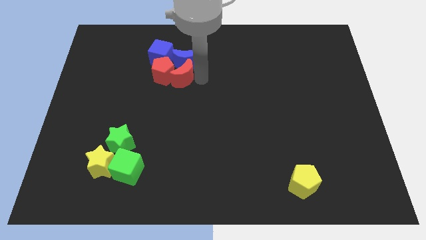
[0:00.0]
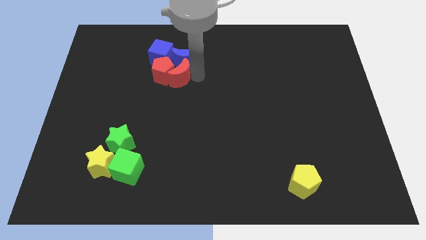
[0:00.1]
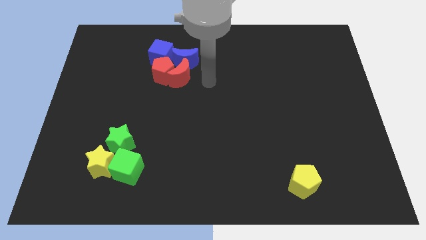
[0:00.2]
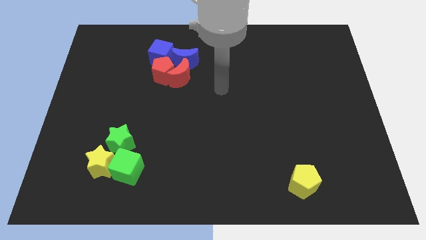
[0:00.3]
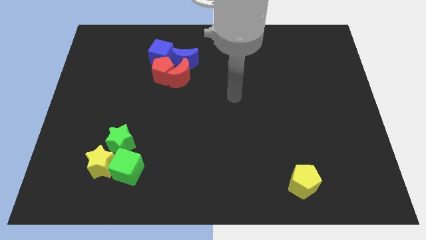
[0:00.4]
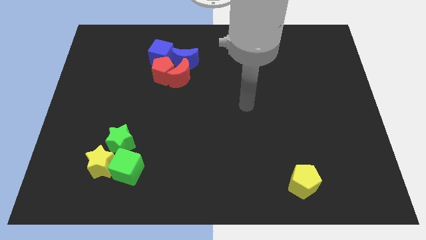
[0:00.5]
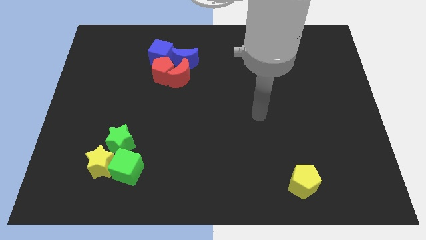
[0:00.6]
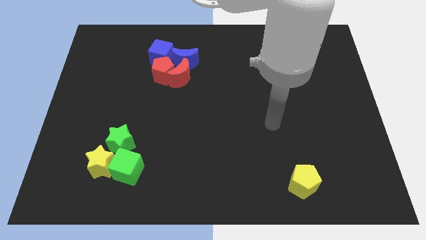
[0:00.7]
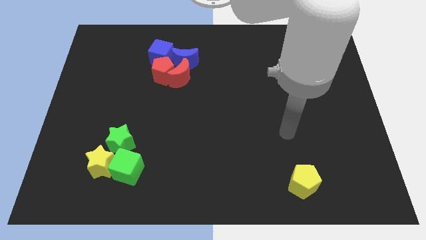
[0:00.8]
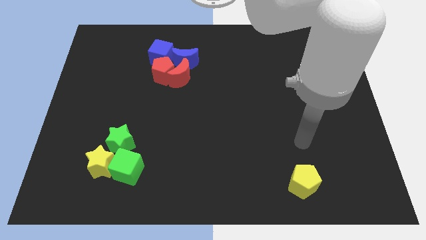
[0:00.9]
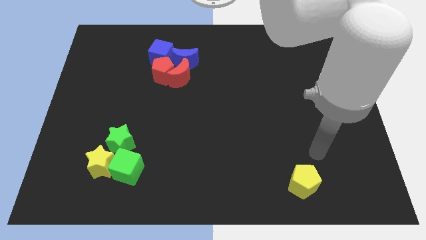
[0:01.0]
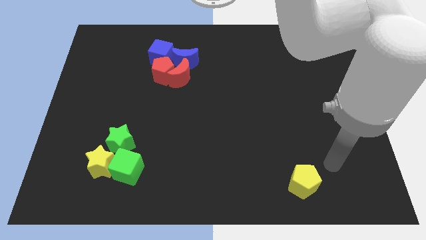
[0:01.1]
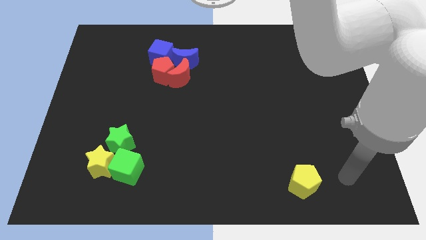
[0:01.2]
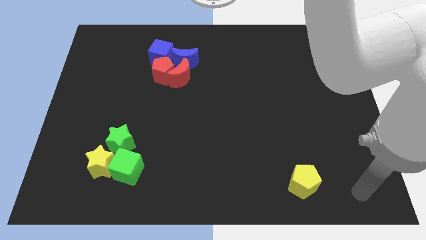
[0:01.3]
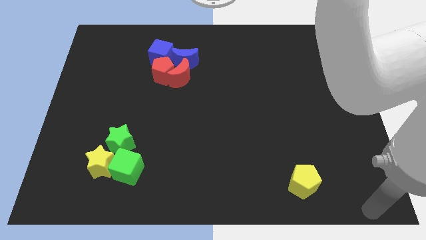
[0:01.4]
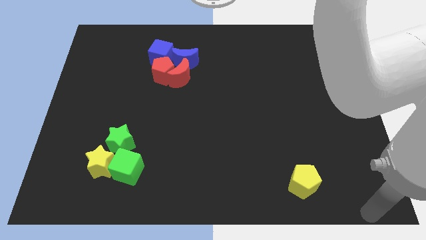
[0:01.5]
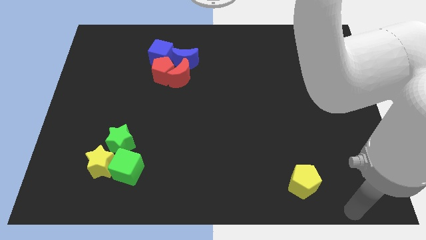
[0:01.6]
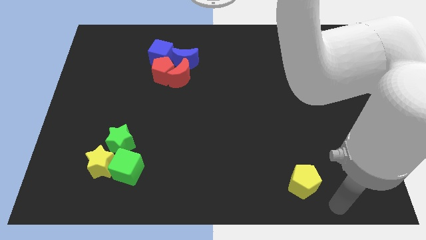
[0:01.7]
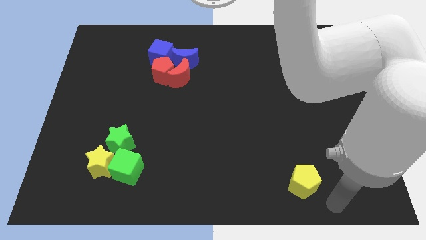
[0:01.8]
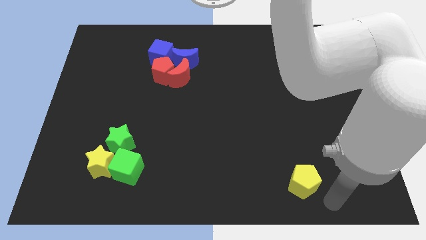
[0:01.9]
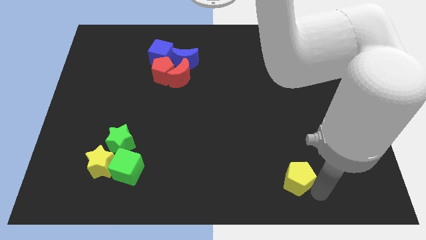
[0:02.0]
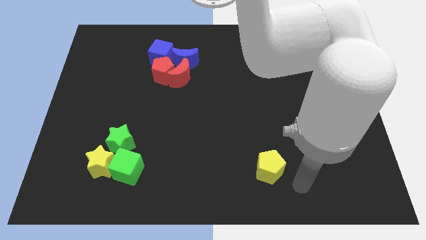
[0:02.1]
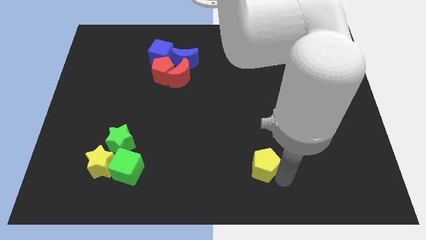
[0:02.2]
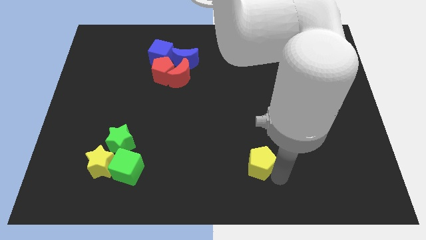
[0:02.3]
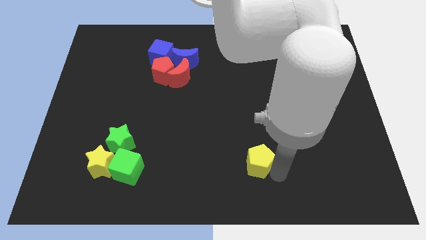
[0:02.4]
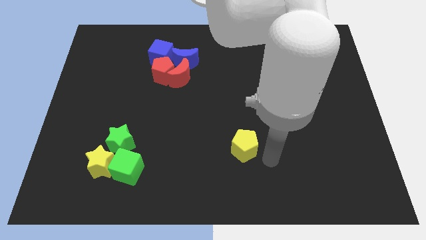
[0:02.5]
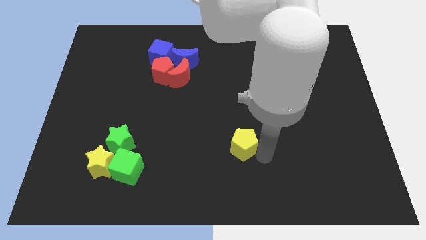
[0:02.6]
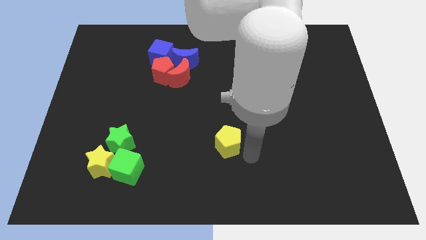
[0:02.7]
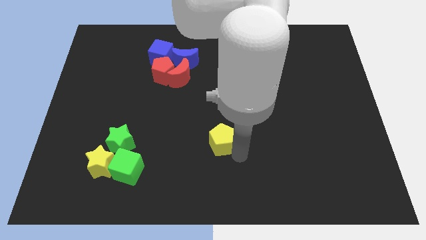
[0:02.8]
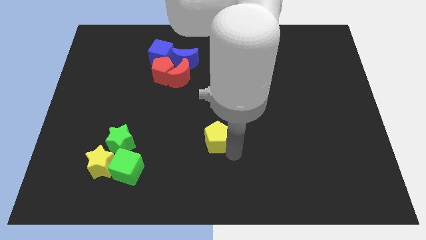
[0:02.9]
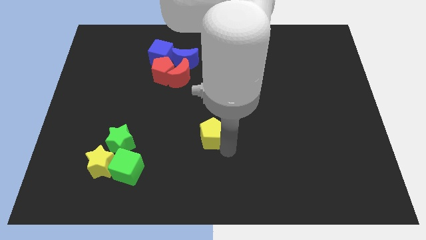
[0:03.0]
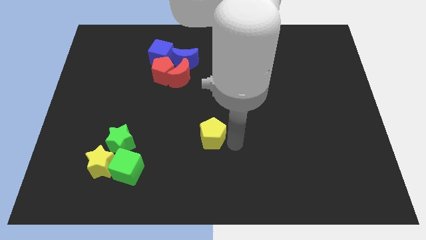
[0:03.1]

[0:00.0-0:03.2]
place the yellow pentagon at the right side of the green objects

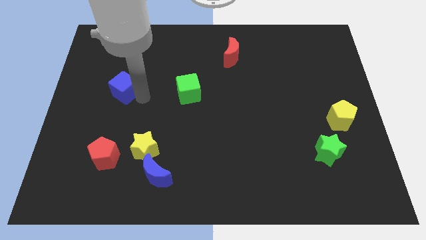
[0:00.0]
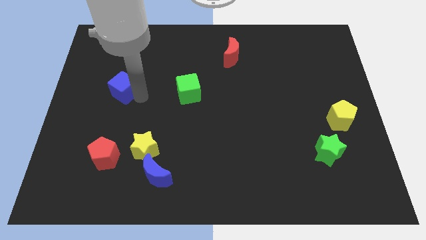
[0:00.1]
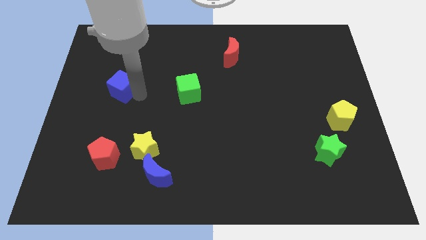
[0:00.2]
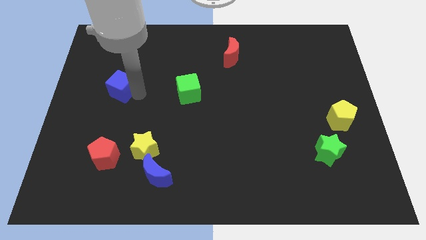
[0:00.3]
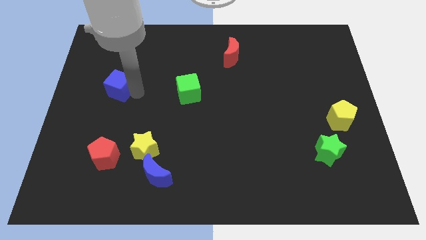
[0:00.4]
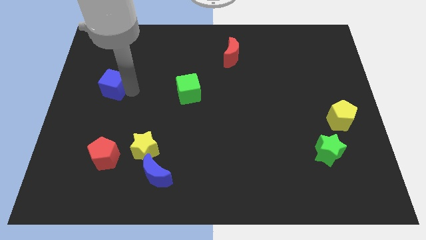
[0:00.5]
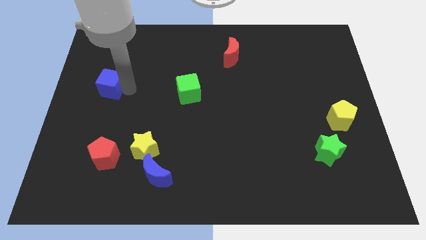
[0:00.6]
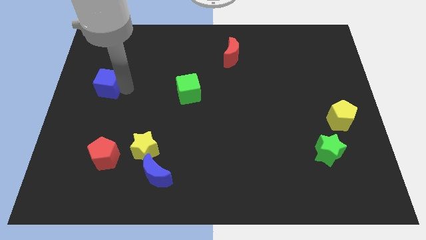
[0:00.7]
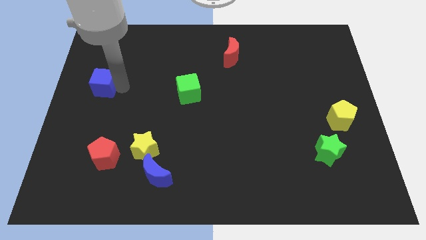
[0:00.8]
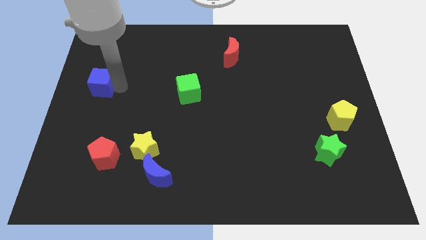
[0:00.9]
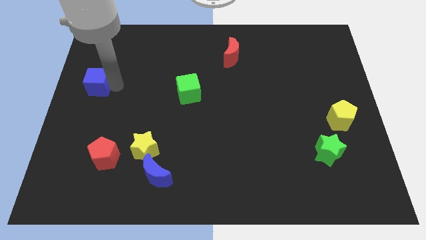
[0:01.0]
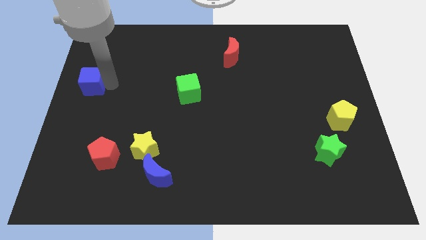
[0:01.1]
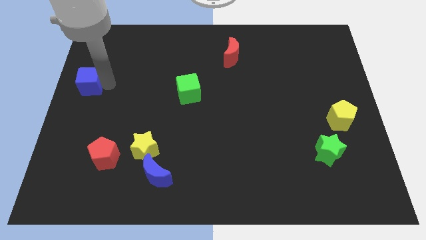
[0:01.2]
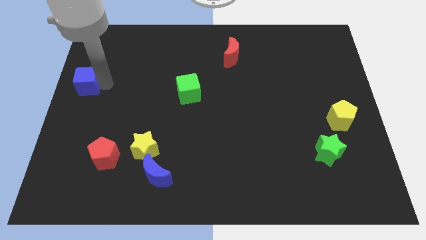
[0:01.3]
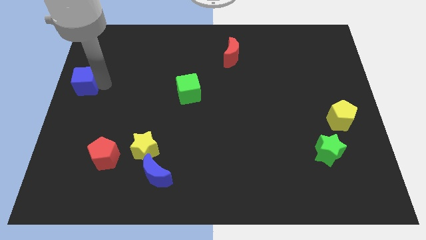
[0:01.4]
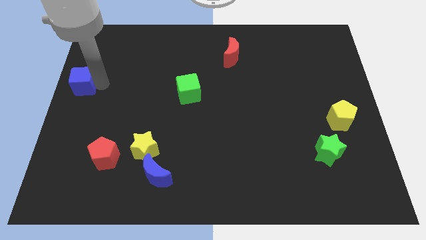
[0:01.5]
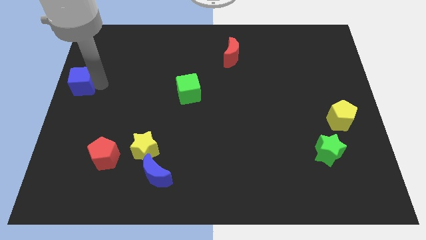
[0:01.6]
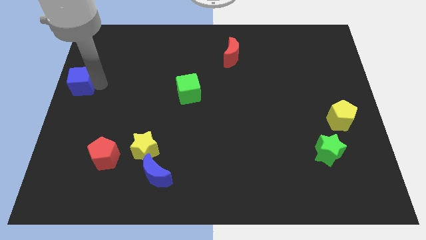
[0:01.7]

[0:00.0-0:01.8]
move the blue cube to the left centre of the board

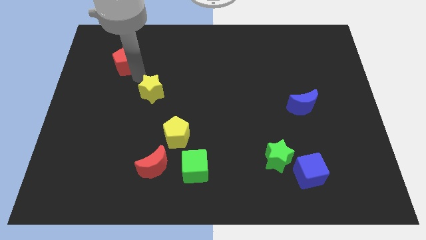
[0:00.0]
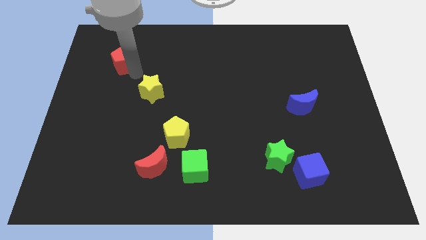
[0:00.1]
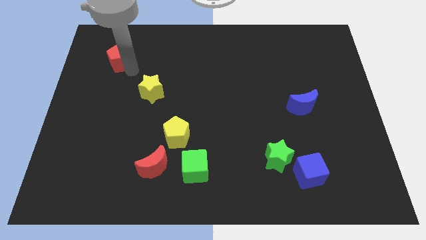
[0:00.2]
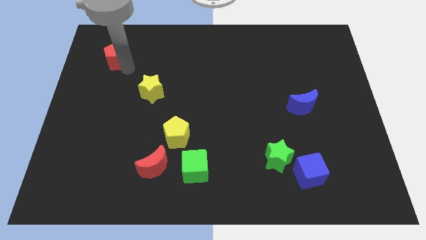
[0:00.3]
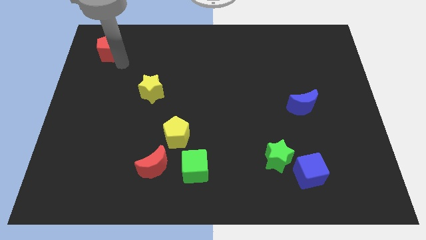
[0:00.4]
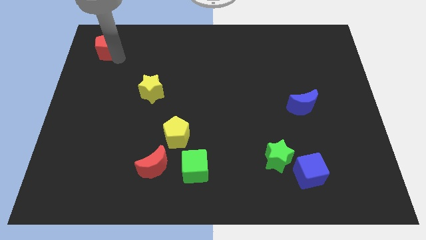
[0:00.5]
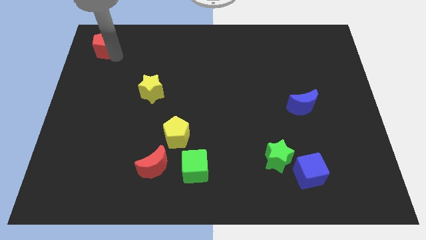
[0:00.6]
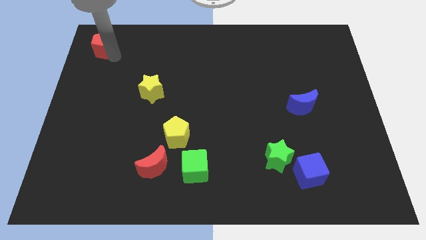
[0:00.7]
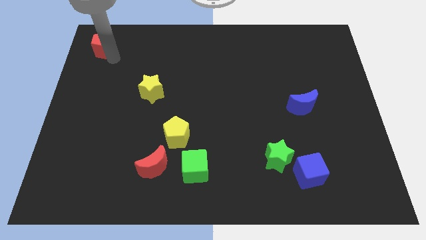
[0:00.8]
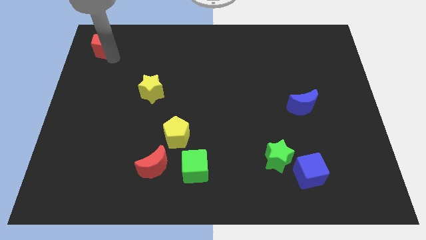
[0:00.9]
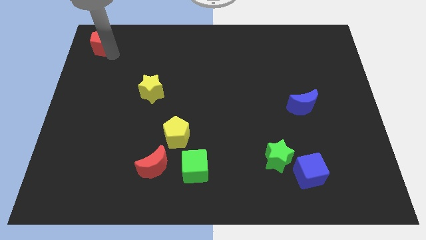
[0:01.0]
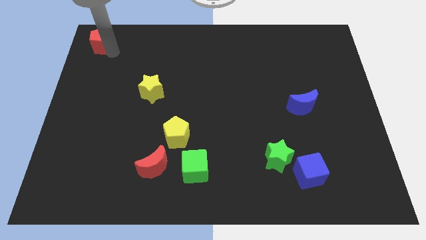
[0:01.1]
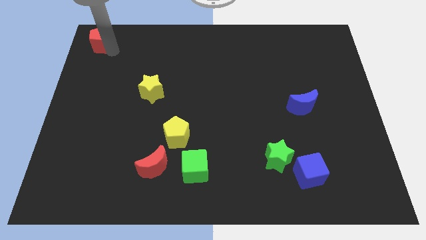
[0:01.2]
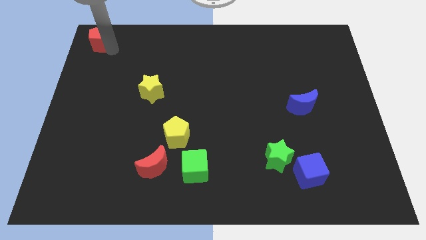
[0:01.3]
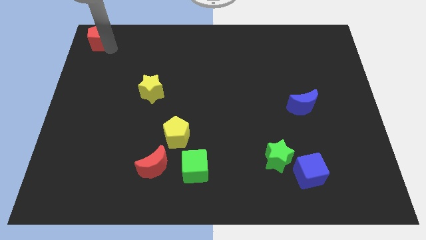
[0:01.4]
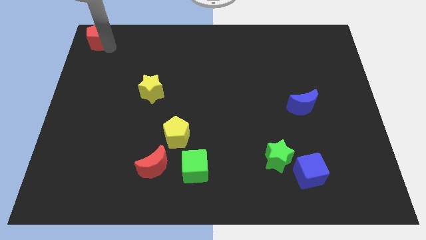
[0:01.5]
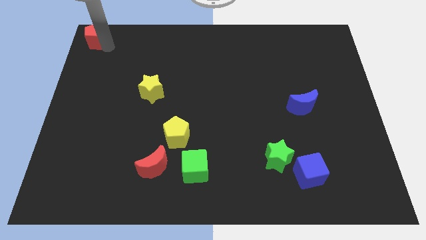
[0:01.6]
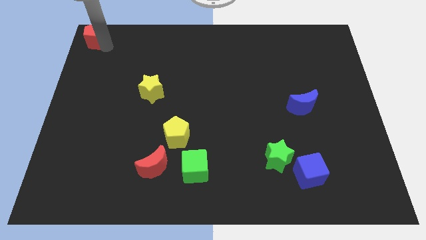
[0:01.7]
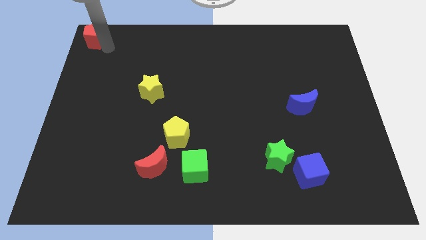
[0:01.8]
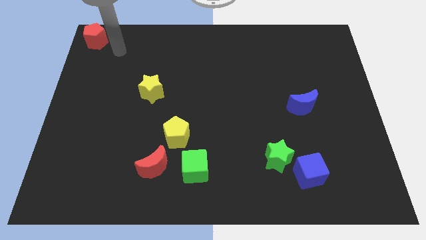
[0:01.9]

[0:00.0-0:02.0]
move the red pentagon diagonally to yellow star

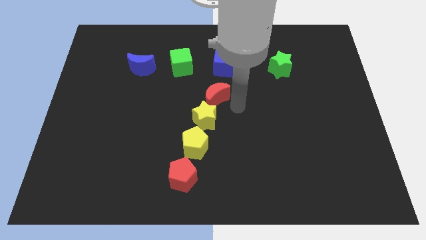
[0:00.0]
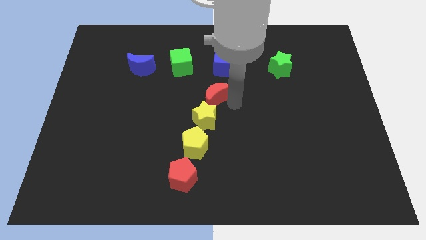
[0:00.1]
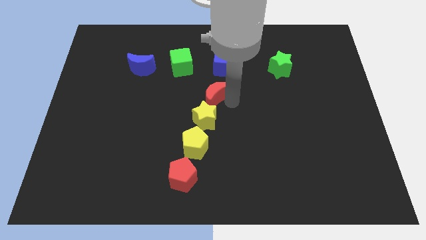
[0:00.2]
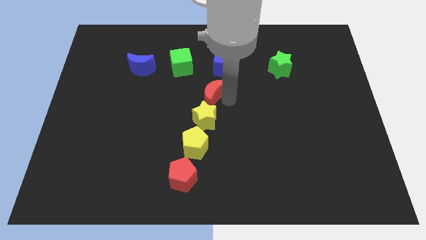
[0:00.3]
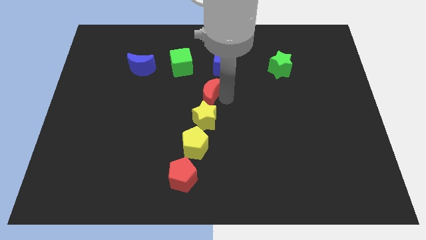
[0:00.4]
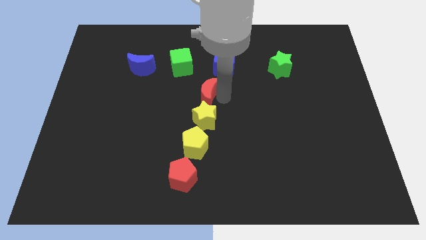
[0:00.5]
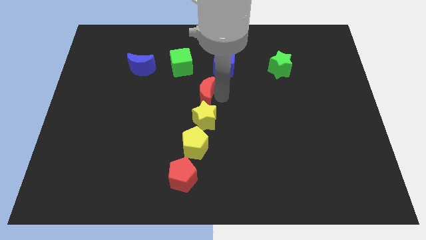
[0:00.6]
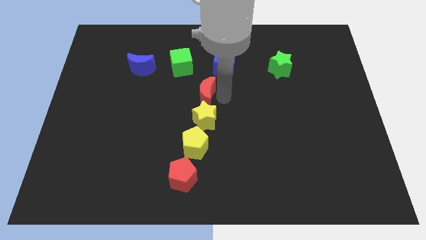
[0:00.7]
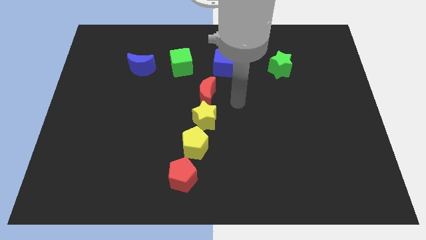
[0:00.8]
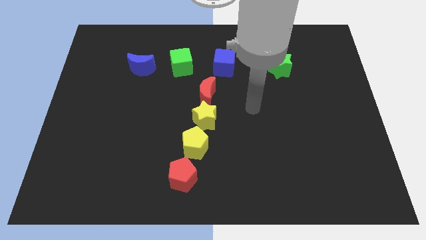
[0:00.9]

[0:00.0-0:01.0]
place red crescent above yellow star

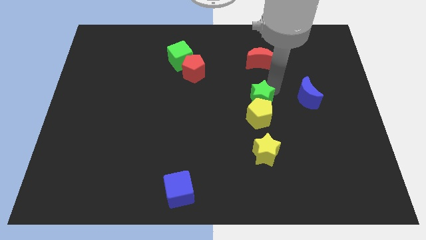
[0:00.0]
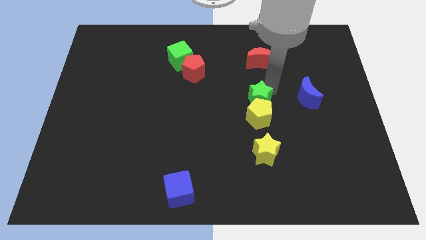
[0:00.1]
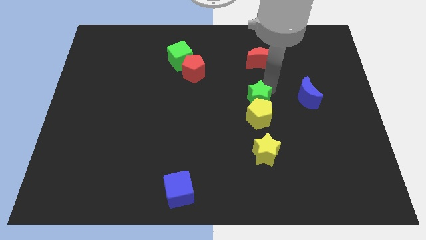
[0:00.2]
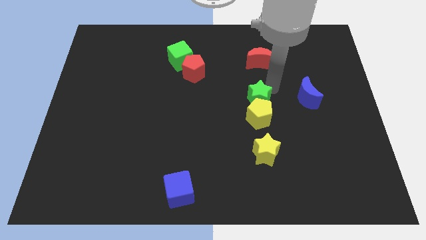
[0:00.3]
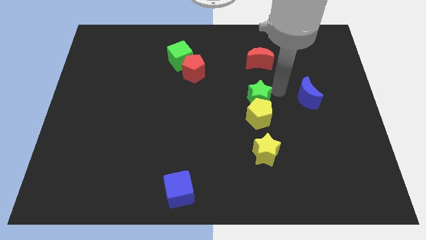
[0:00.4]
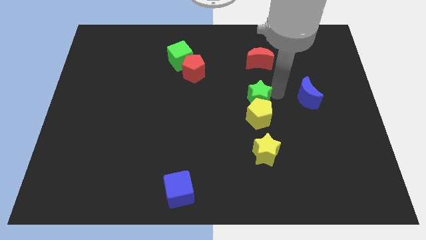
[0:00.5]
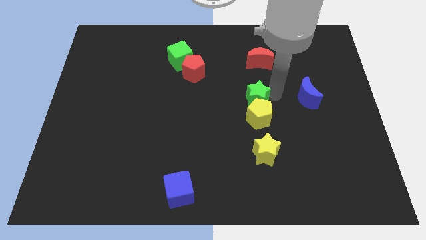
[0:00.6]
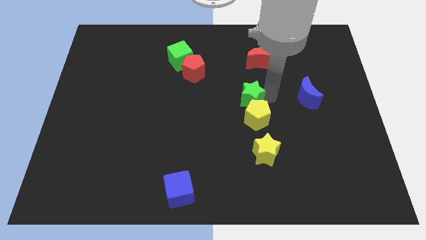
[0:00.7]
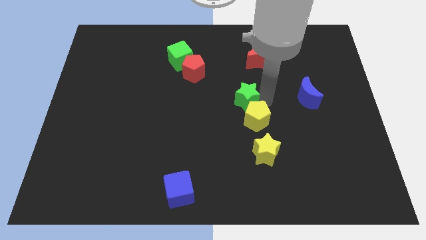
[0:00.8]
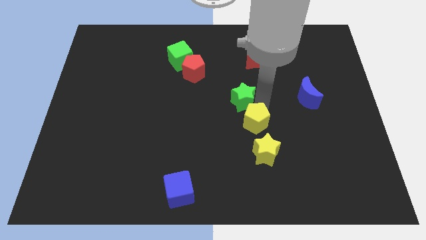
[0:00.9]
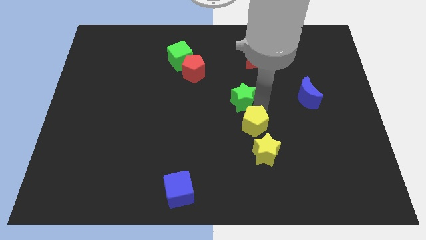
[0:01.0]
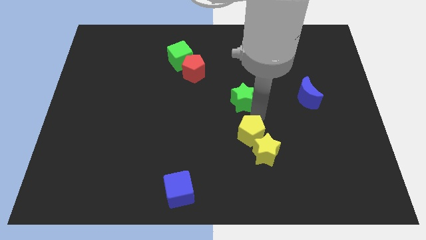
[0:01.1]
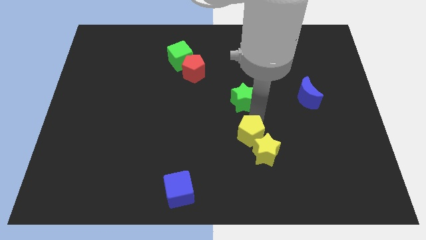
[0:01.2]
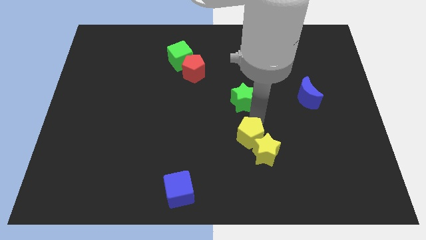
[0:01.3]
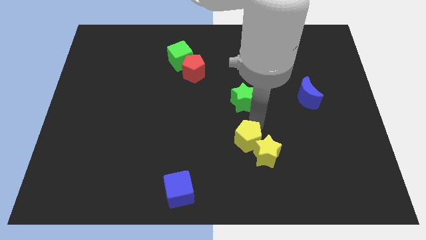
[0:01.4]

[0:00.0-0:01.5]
push the yellow pentagon into the yellow star
